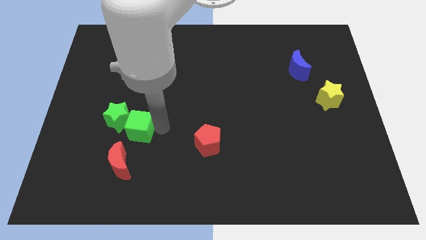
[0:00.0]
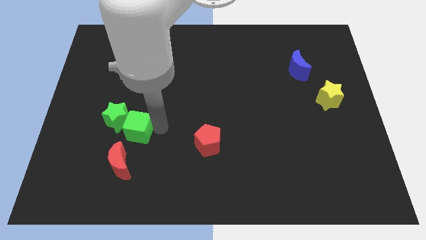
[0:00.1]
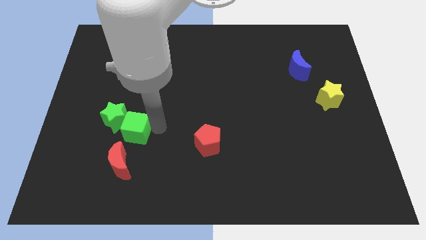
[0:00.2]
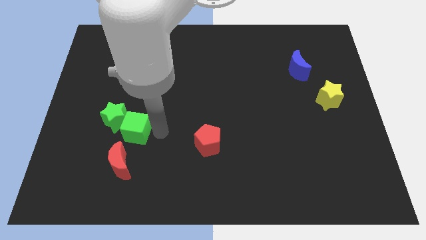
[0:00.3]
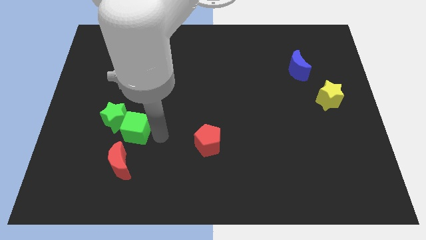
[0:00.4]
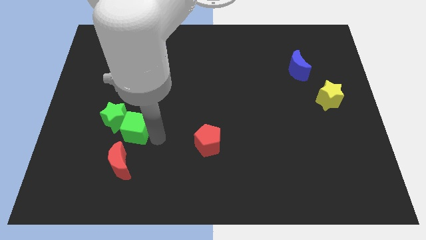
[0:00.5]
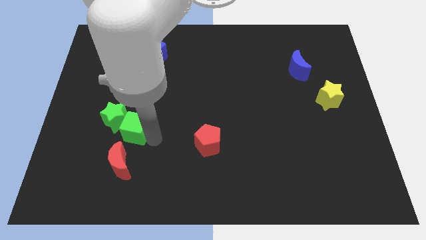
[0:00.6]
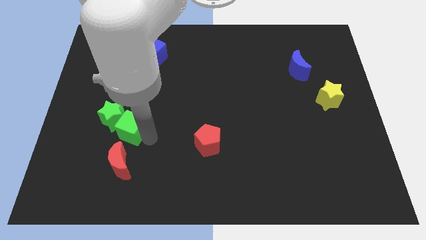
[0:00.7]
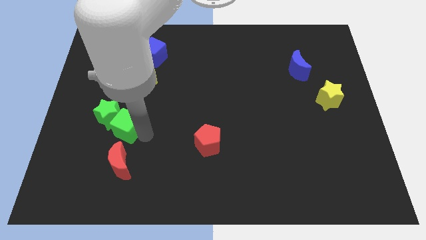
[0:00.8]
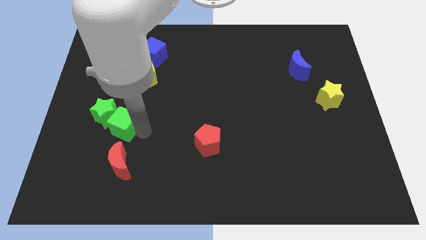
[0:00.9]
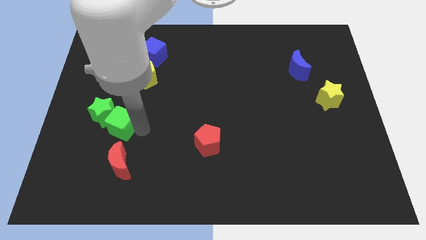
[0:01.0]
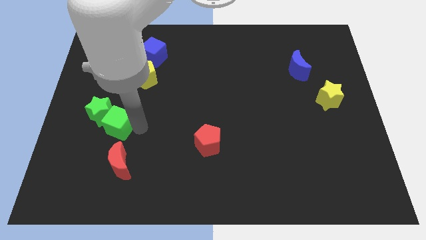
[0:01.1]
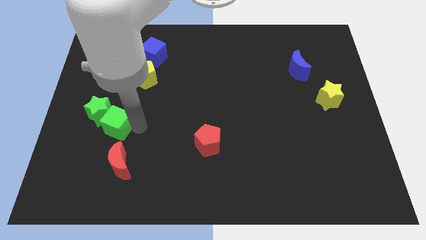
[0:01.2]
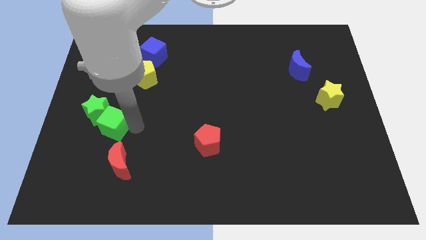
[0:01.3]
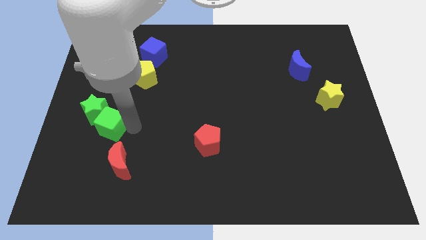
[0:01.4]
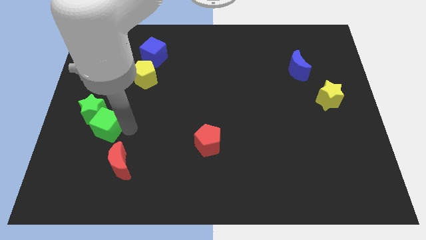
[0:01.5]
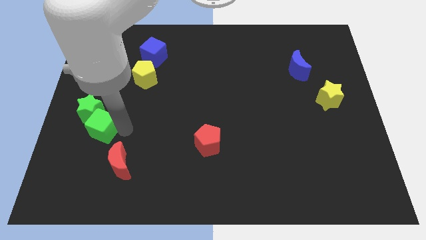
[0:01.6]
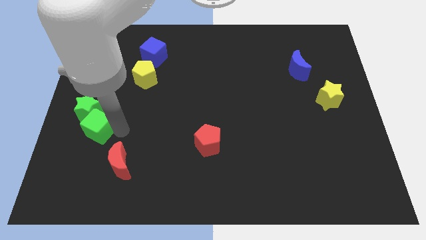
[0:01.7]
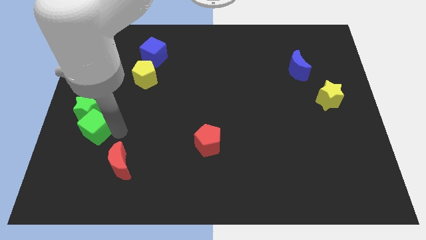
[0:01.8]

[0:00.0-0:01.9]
move green cube into green star

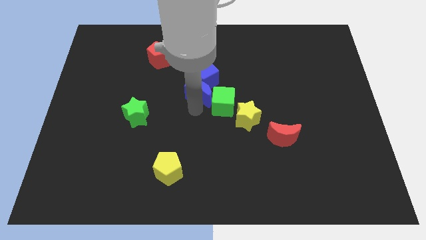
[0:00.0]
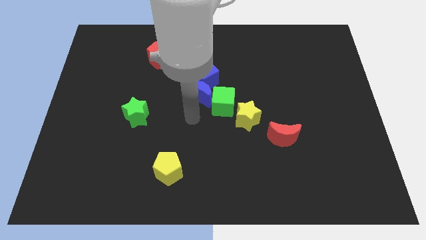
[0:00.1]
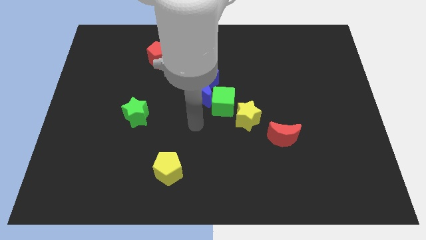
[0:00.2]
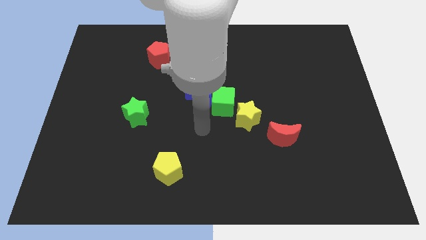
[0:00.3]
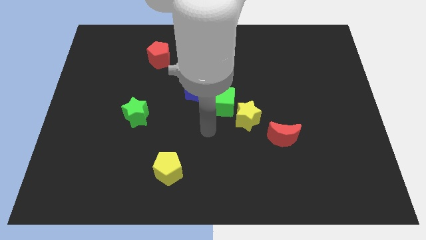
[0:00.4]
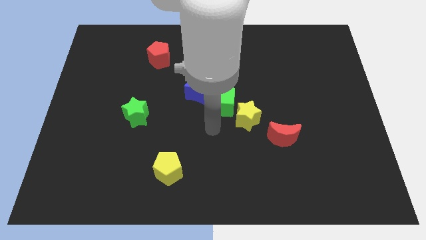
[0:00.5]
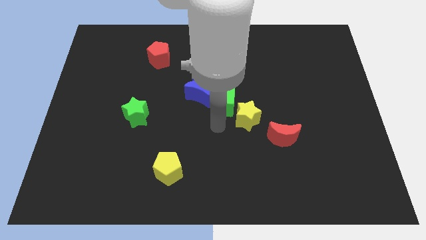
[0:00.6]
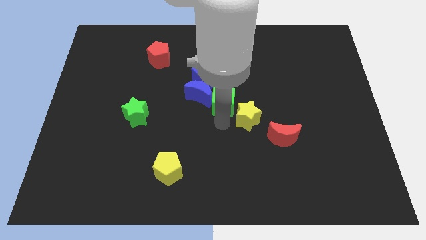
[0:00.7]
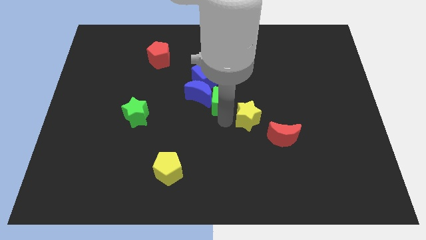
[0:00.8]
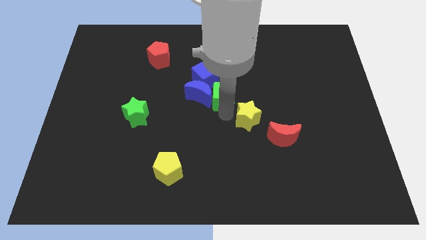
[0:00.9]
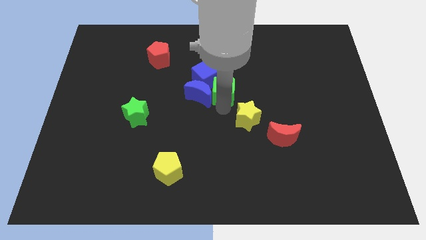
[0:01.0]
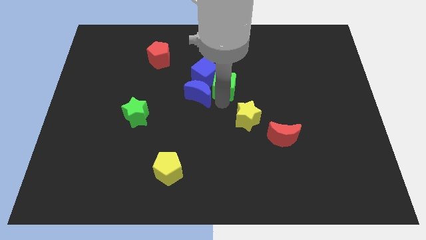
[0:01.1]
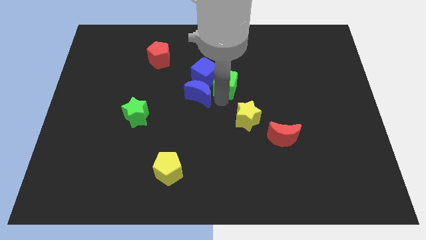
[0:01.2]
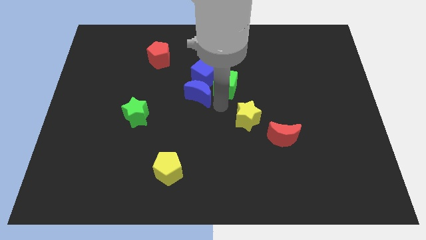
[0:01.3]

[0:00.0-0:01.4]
move the green cube slightly upwards

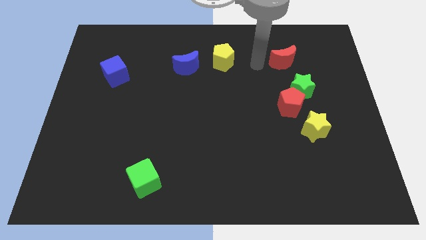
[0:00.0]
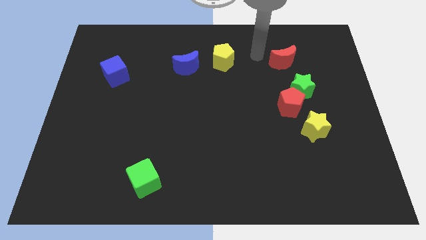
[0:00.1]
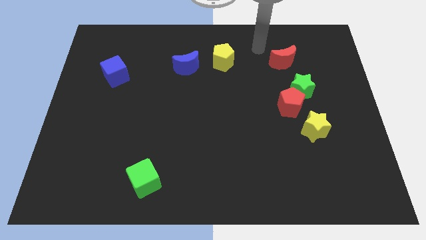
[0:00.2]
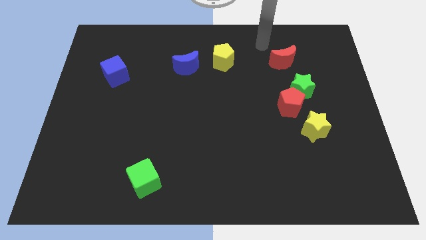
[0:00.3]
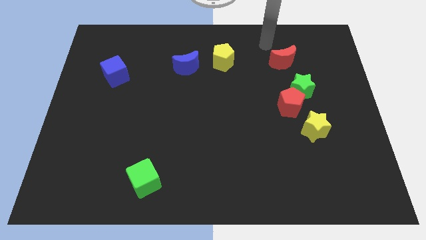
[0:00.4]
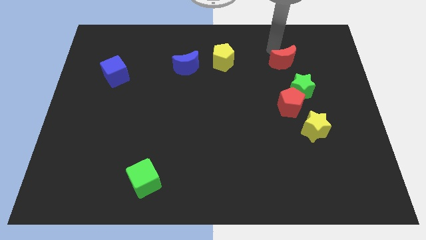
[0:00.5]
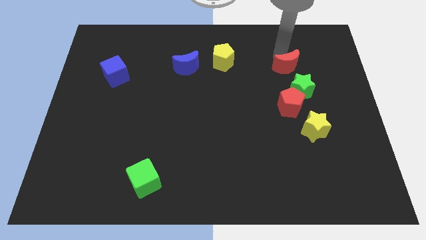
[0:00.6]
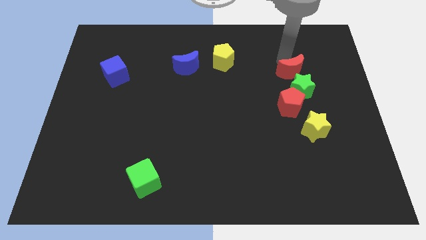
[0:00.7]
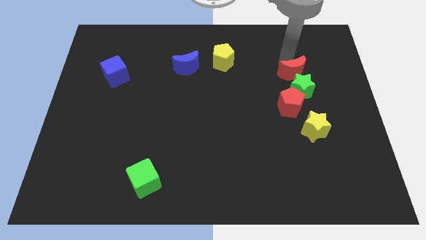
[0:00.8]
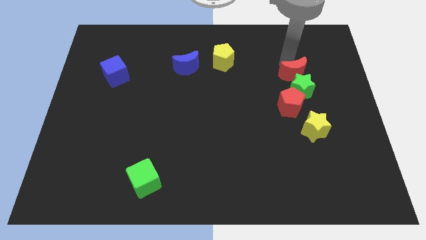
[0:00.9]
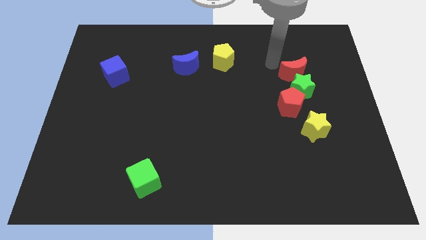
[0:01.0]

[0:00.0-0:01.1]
move the red crescent close to the top of the green star

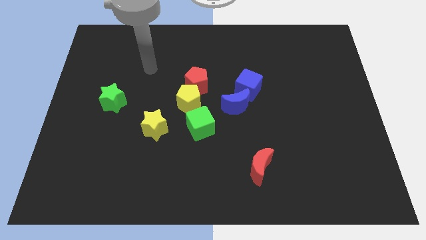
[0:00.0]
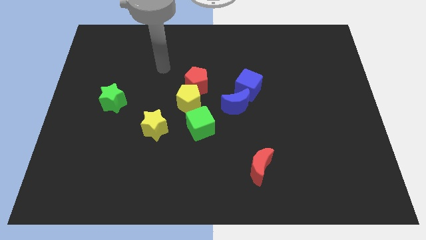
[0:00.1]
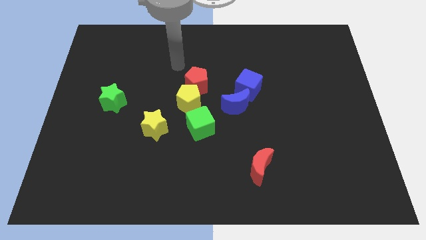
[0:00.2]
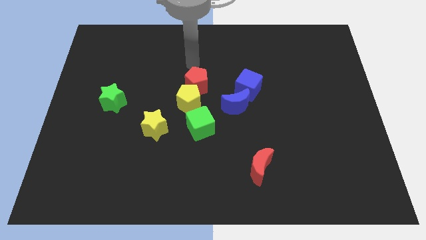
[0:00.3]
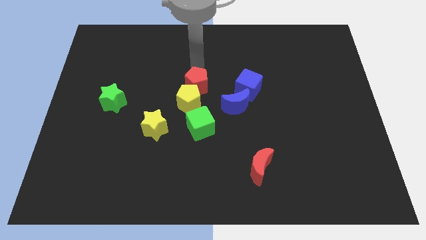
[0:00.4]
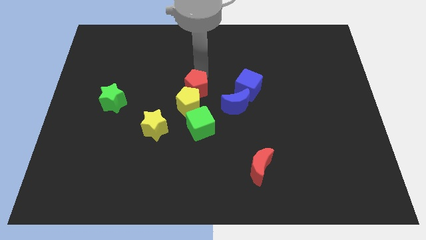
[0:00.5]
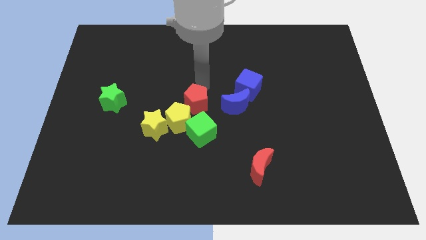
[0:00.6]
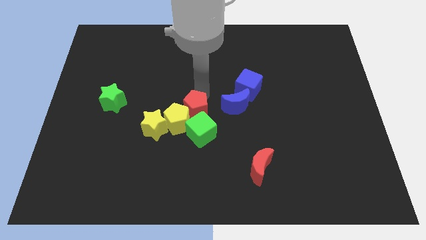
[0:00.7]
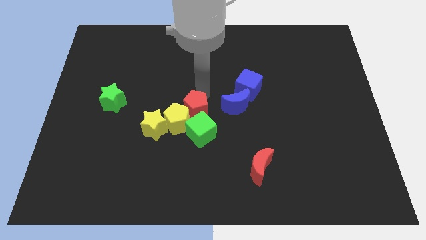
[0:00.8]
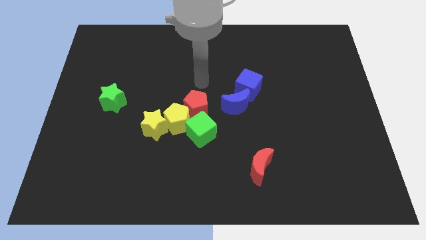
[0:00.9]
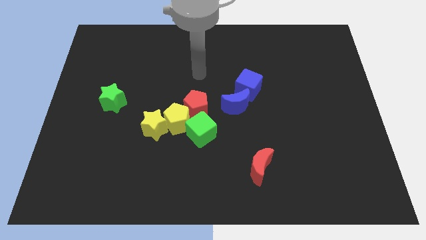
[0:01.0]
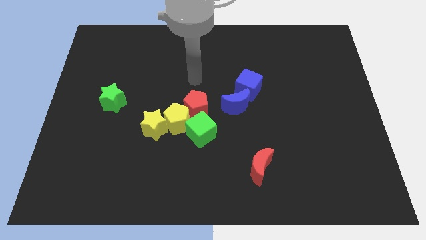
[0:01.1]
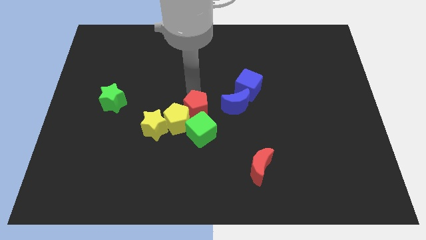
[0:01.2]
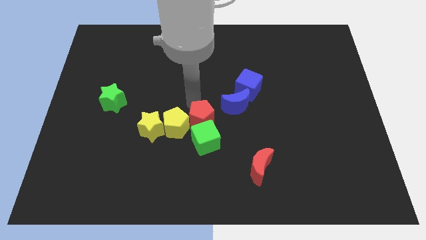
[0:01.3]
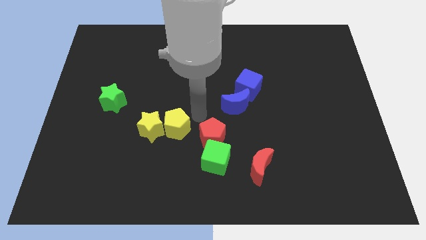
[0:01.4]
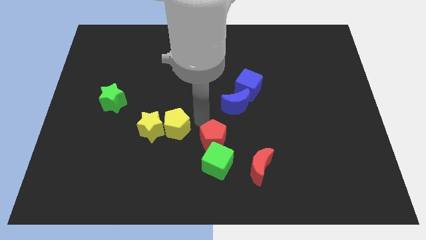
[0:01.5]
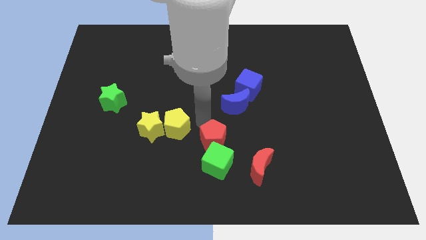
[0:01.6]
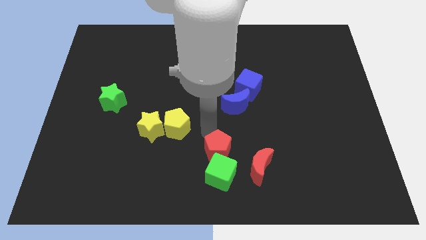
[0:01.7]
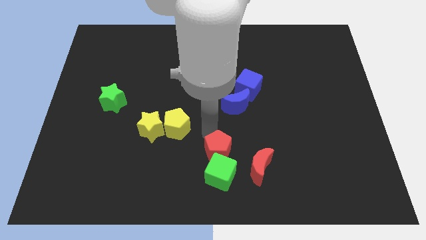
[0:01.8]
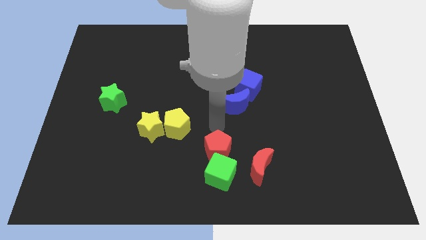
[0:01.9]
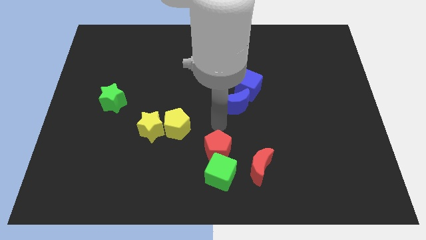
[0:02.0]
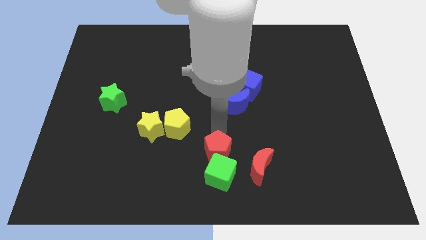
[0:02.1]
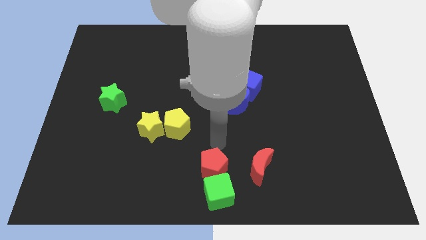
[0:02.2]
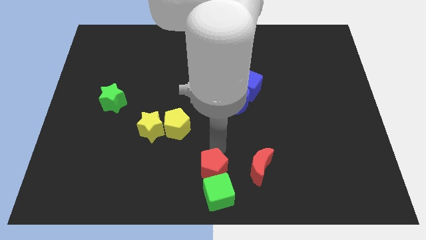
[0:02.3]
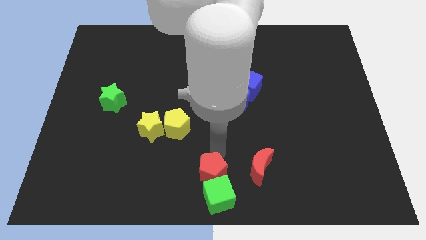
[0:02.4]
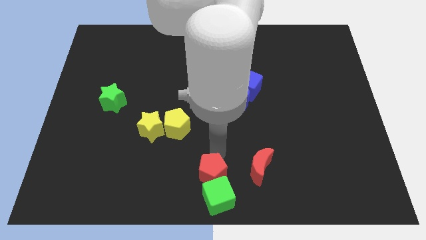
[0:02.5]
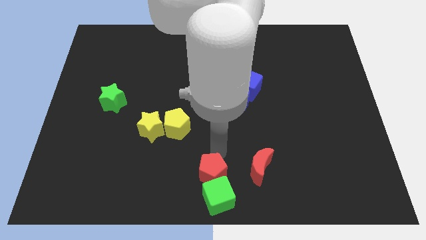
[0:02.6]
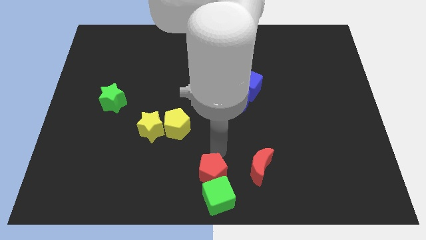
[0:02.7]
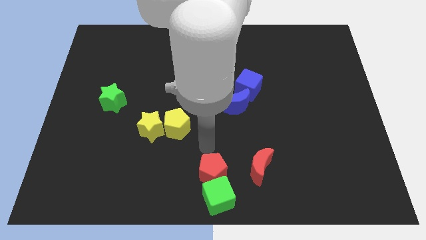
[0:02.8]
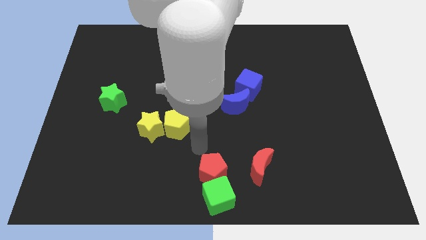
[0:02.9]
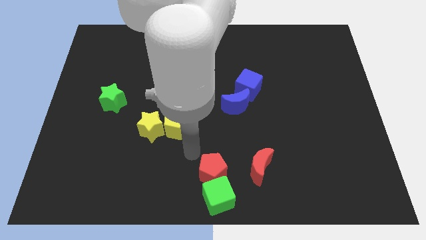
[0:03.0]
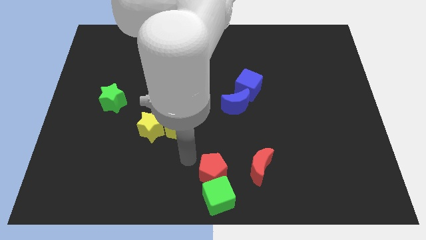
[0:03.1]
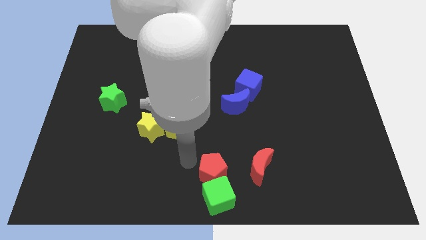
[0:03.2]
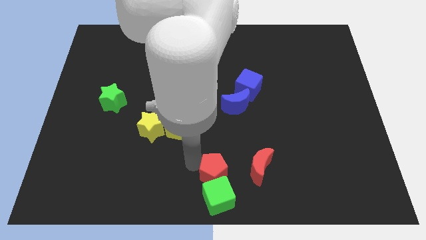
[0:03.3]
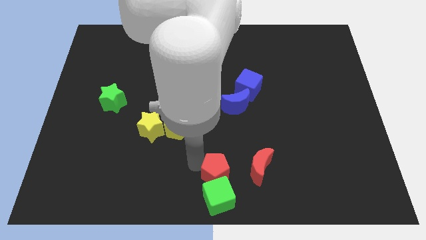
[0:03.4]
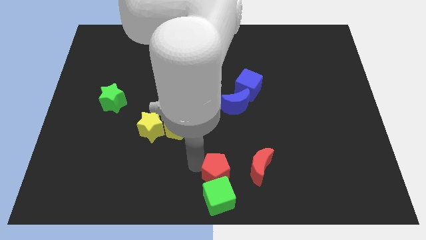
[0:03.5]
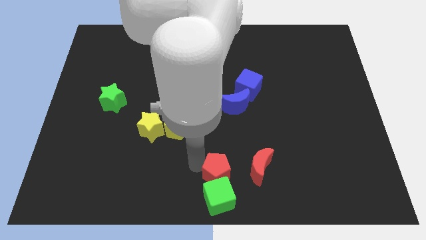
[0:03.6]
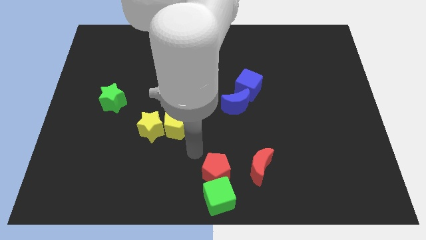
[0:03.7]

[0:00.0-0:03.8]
push the red pentagon to the left of the red crescent

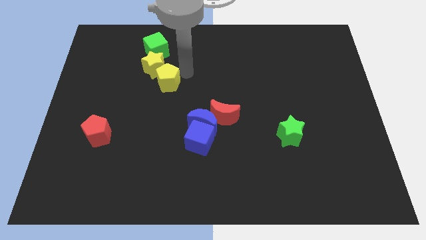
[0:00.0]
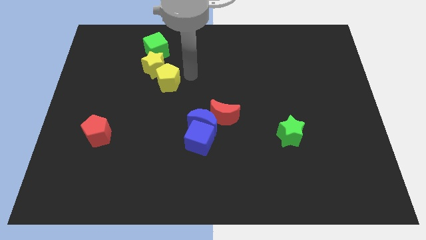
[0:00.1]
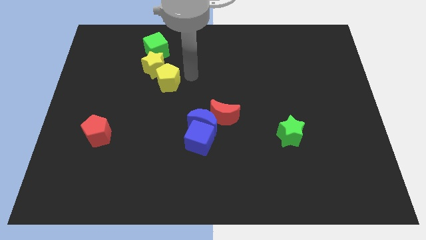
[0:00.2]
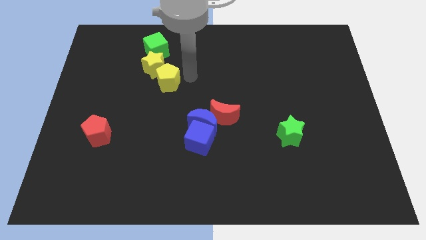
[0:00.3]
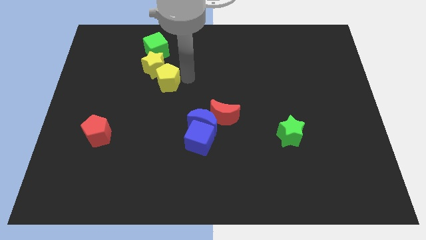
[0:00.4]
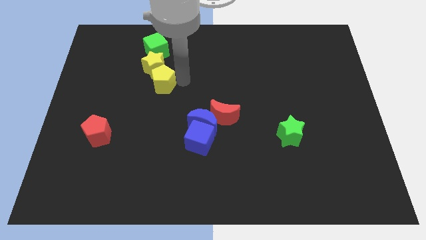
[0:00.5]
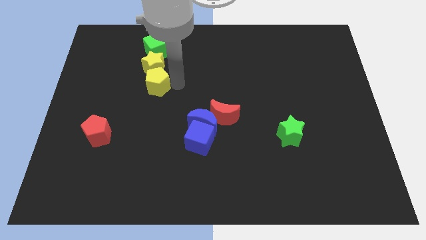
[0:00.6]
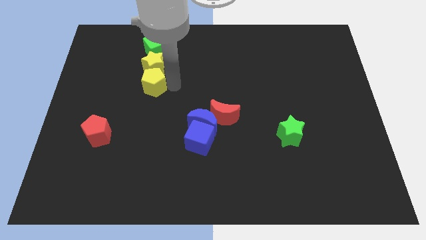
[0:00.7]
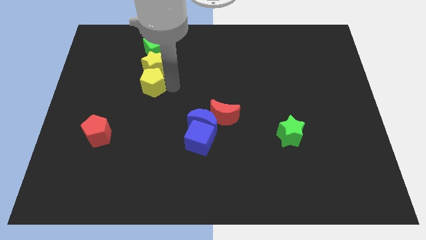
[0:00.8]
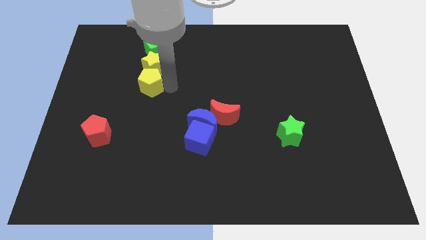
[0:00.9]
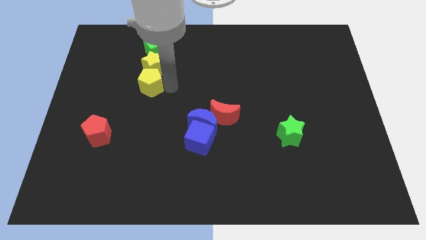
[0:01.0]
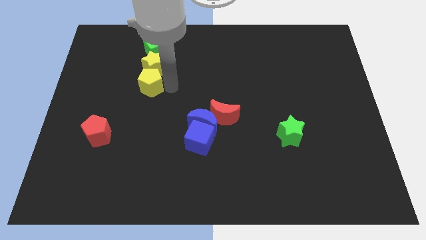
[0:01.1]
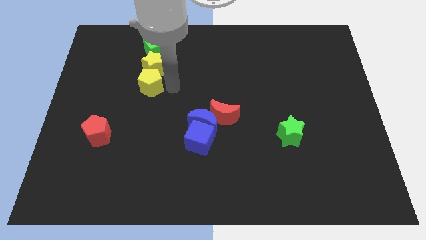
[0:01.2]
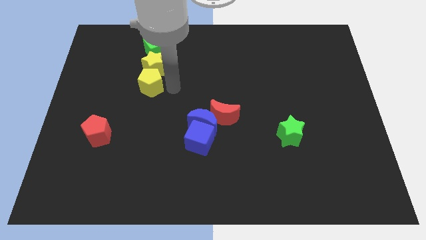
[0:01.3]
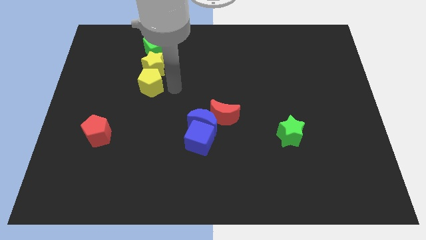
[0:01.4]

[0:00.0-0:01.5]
place the yellow pentagon below the yellow star
